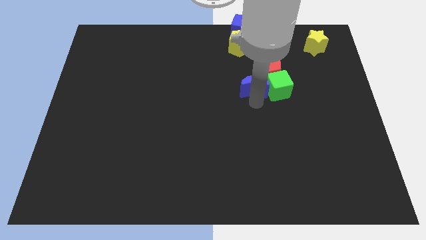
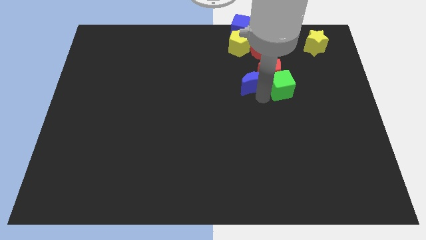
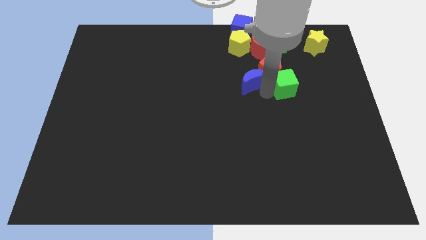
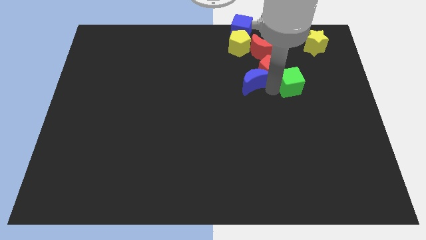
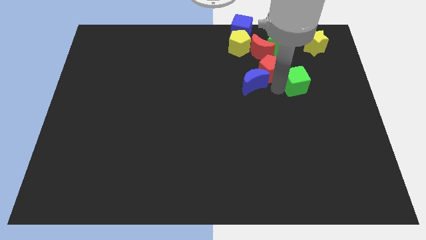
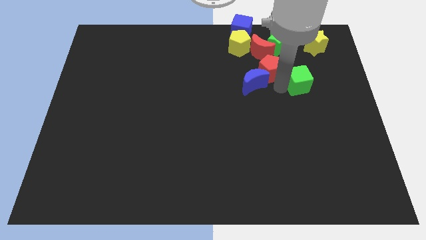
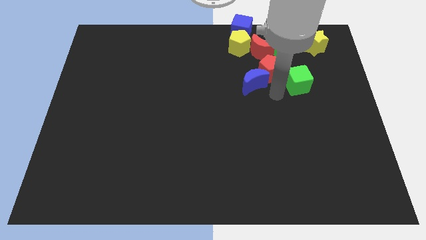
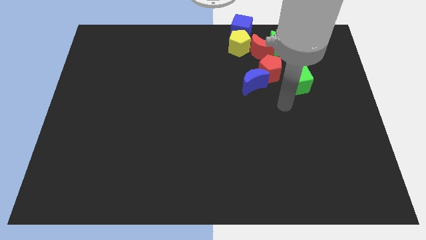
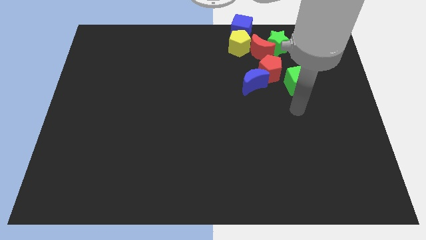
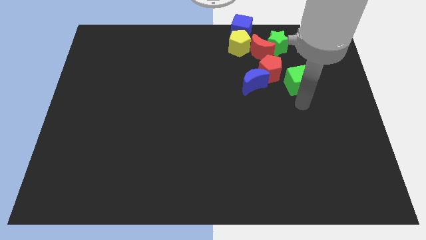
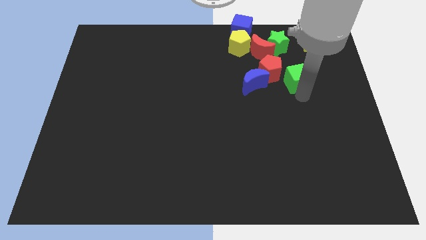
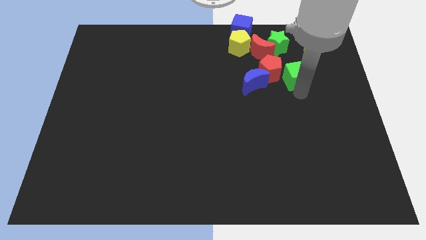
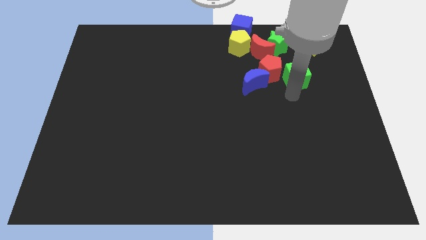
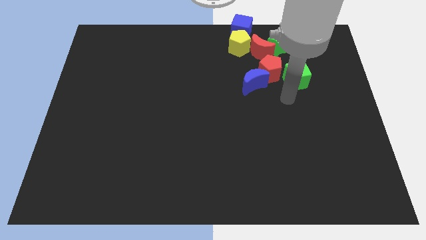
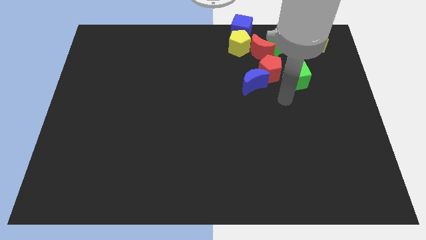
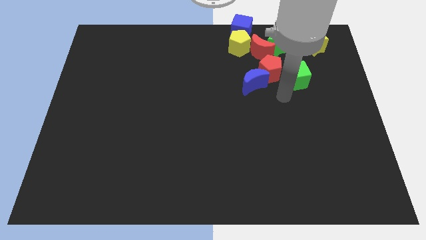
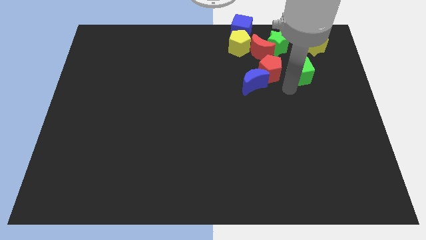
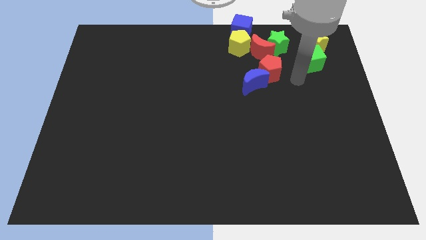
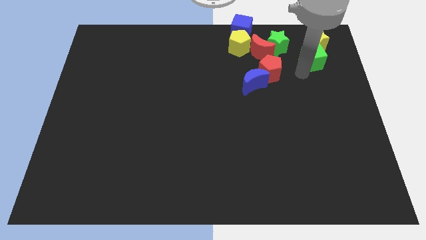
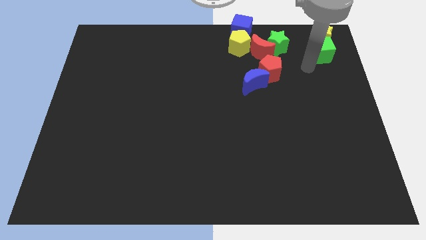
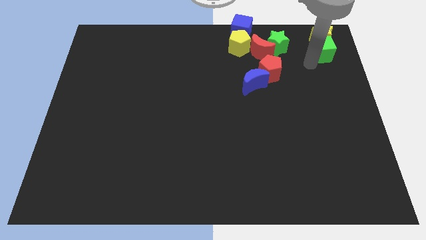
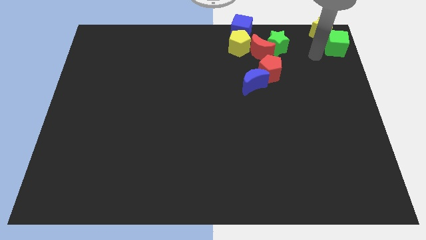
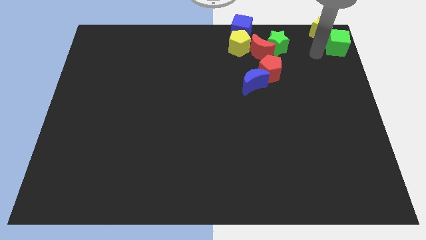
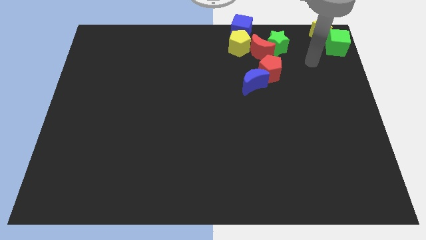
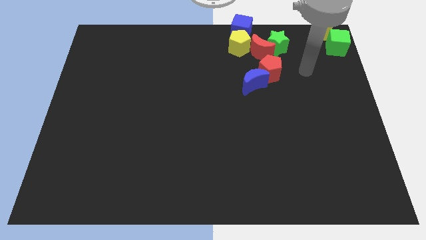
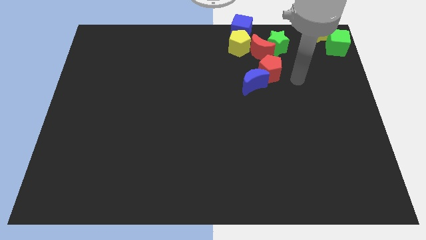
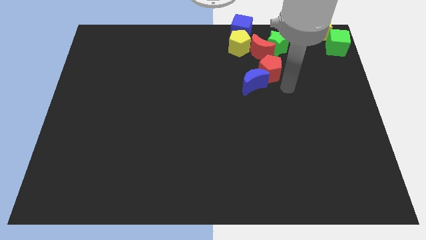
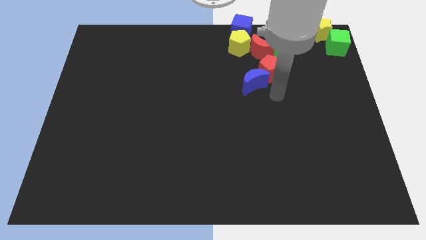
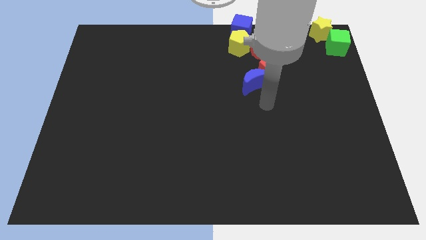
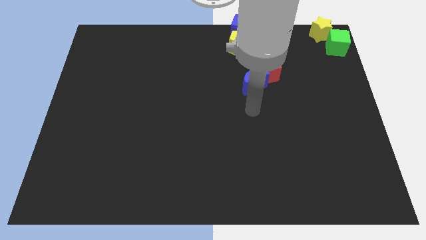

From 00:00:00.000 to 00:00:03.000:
move the green cube to the top right corner

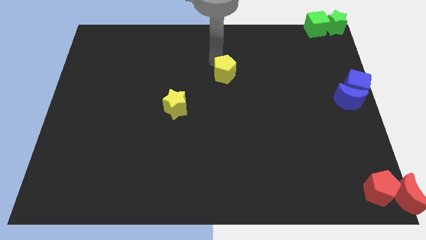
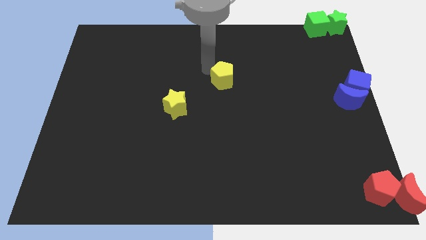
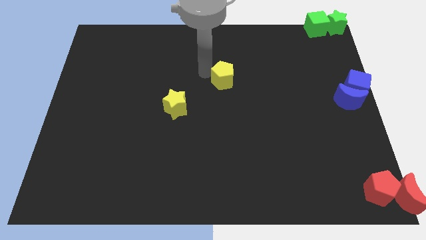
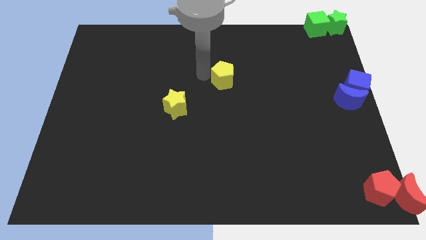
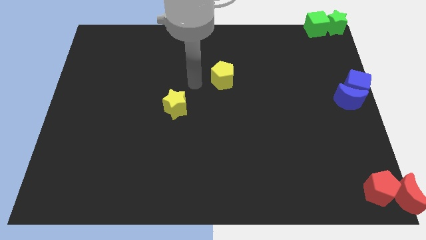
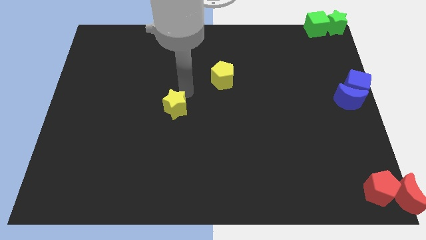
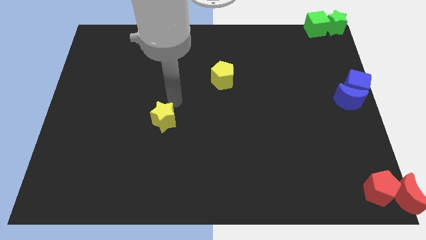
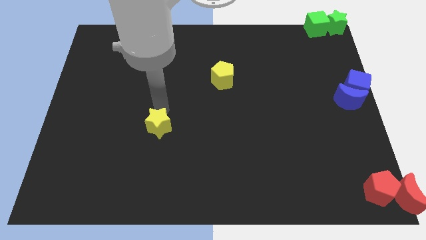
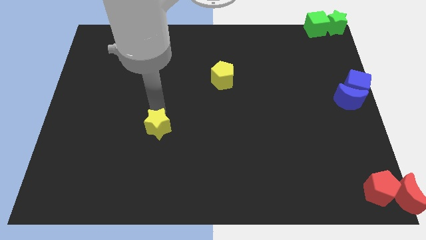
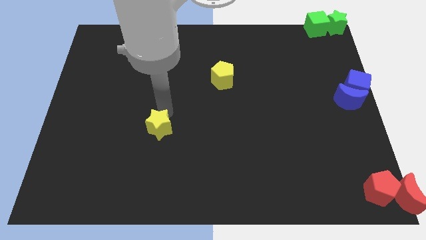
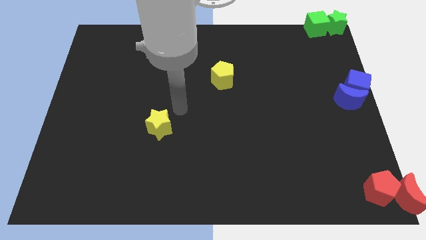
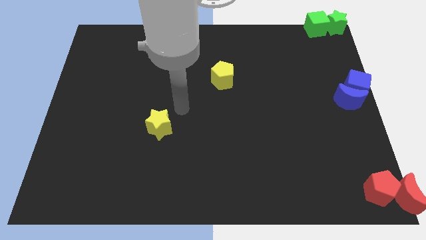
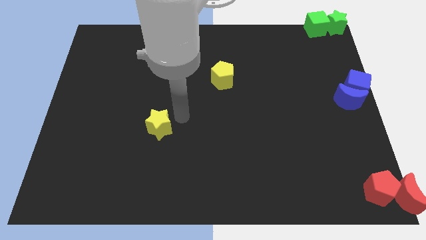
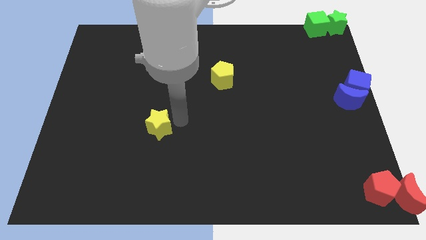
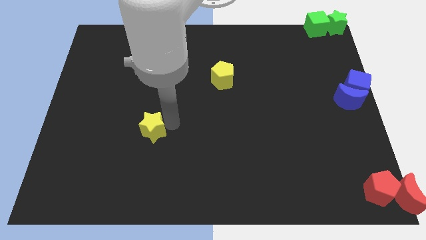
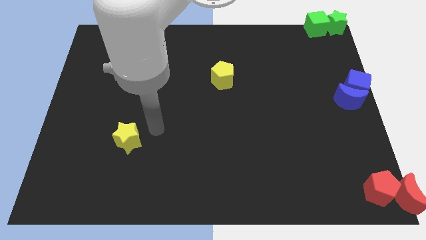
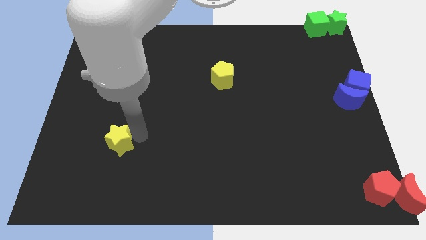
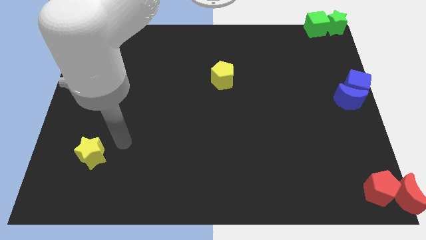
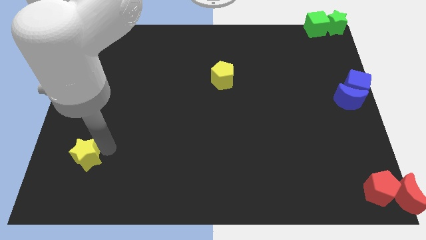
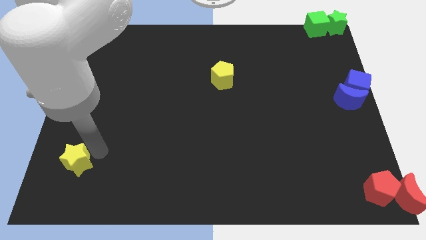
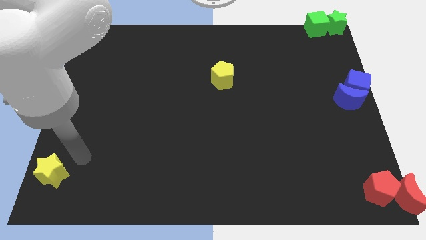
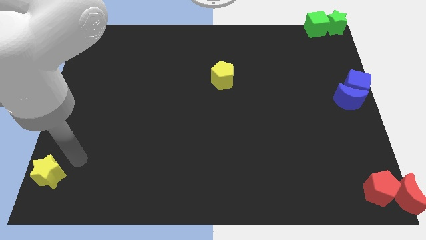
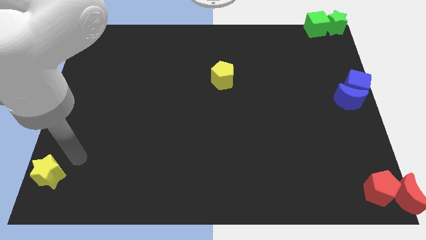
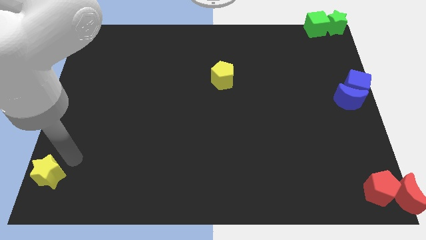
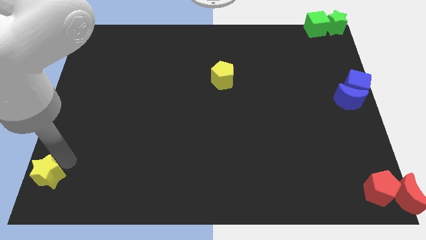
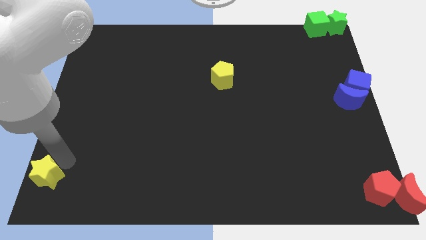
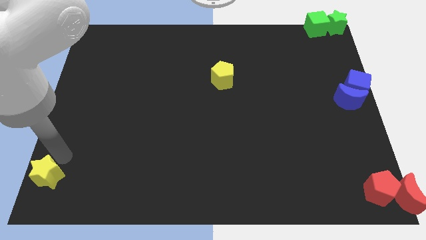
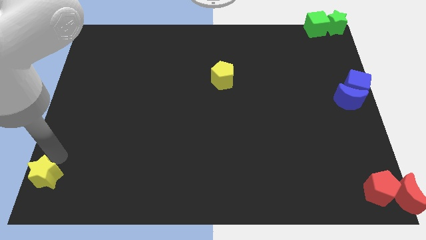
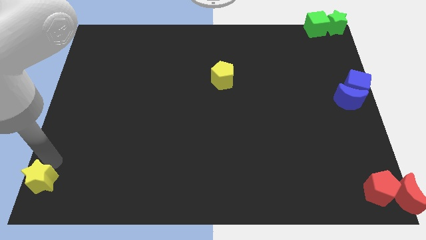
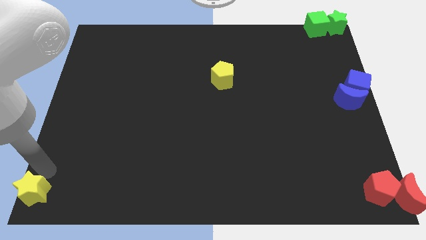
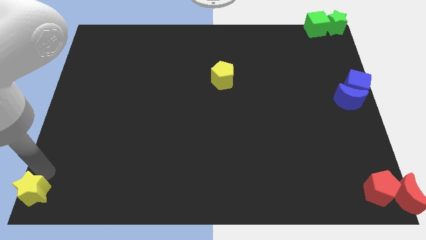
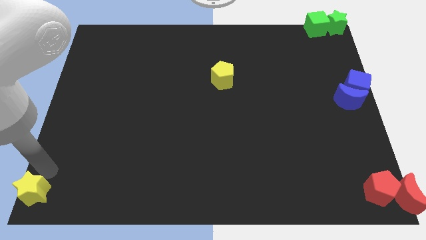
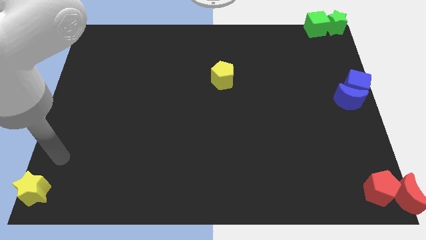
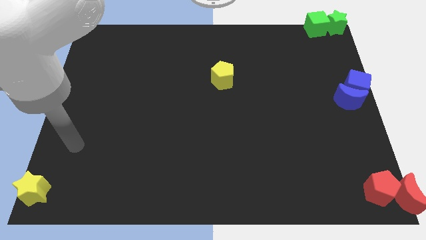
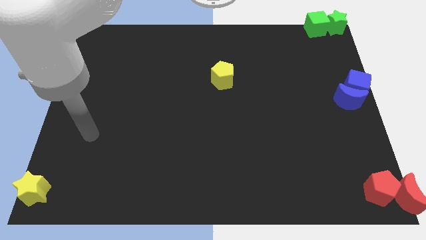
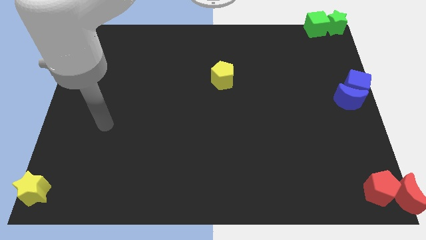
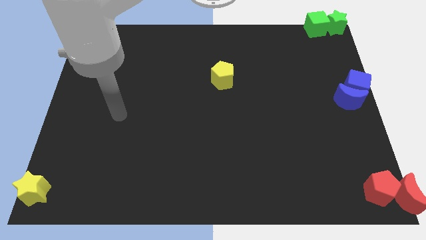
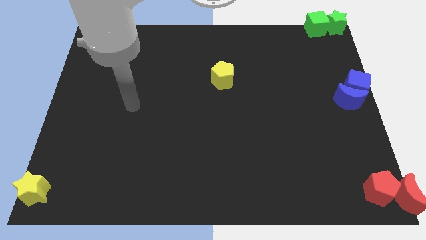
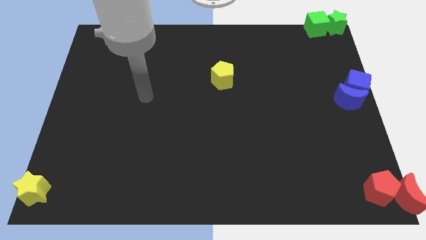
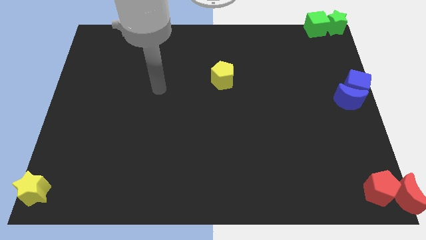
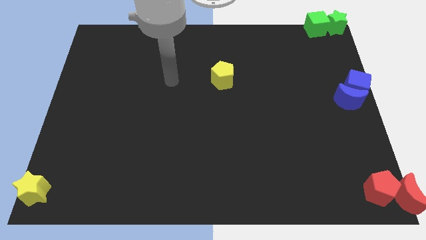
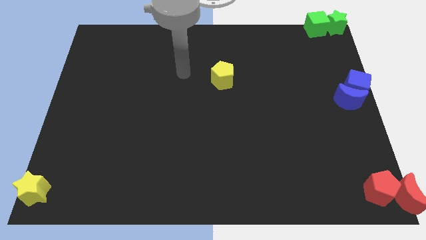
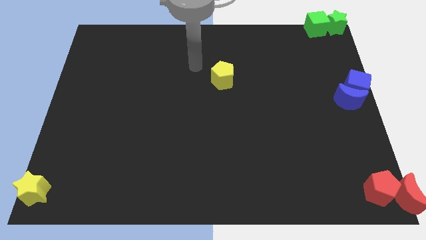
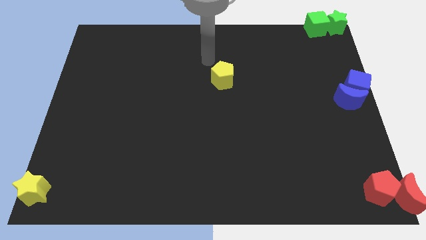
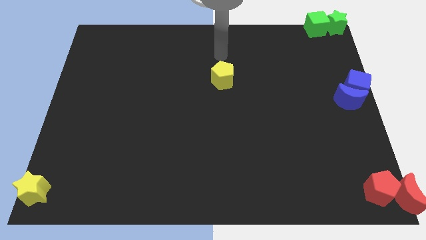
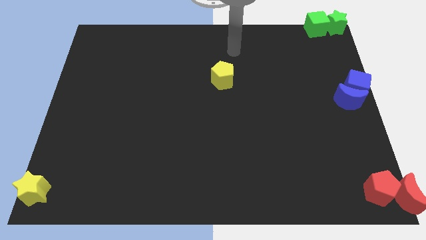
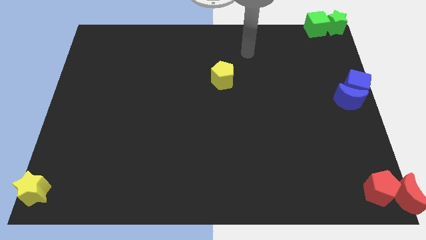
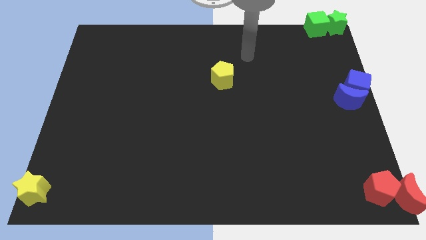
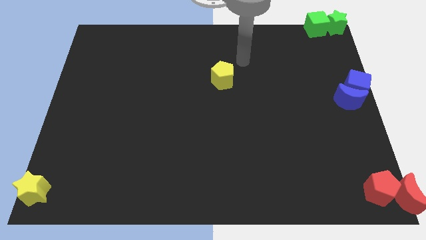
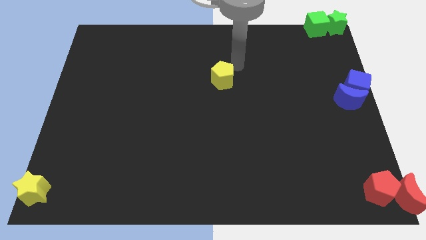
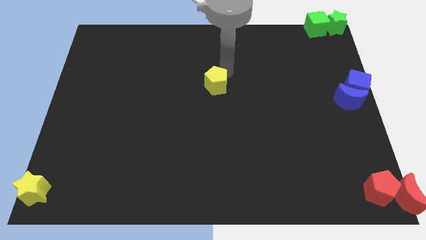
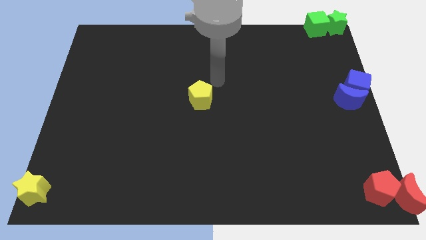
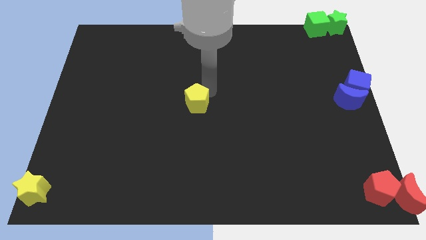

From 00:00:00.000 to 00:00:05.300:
move the yellow star to the bottom left corner of the board

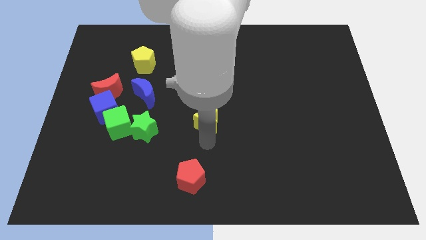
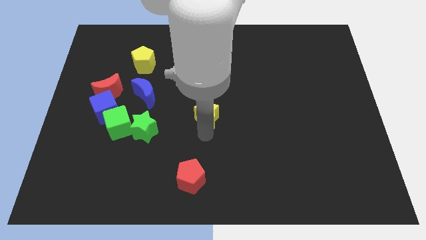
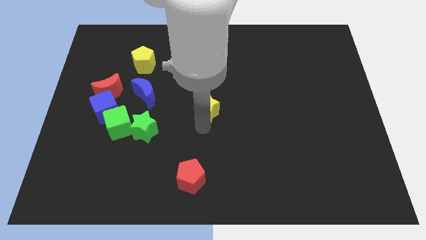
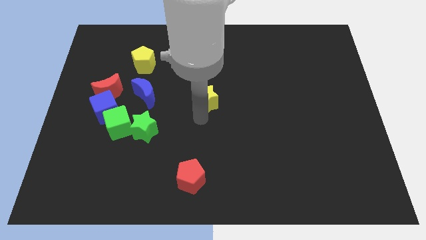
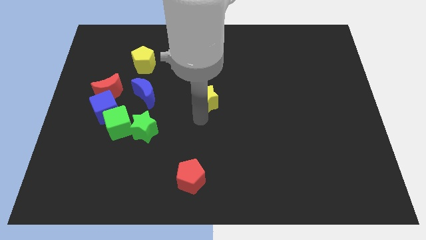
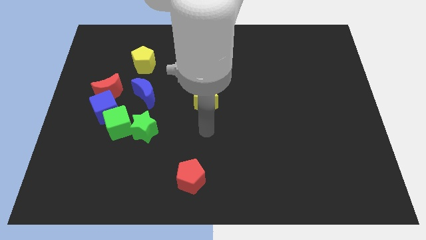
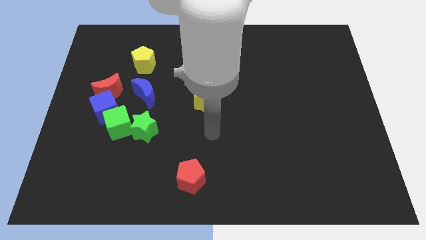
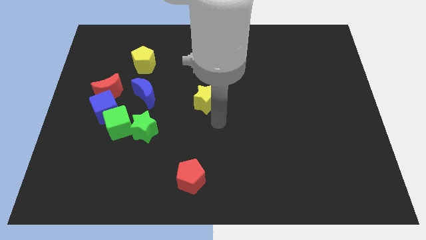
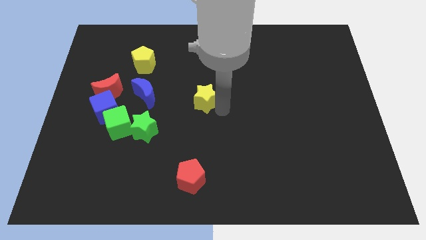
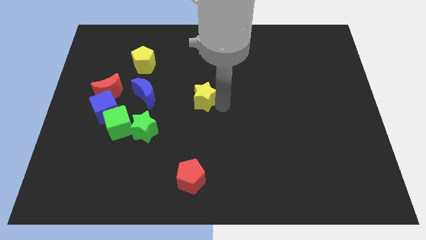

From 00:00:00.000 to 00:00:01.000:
push the yellow star to the center of the board
